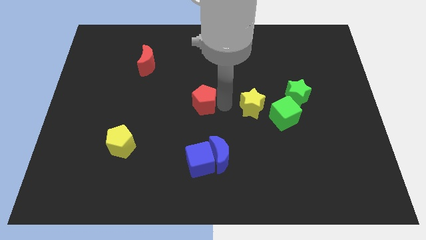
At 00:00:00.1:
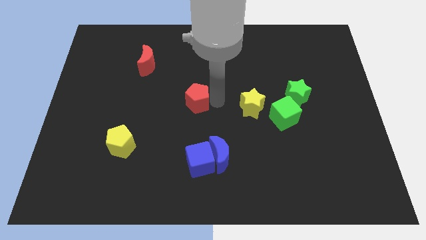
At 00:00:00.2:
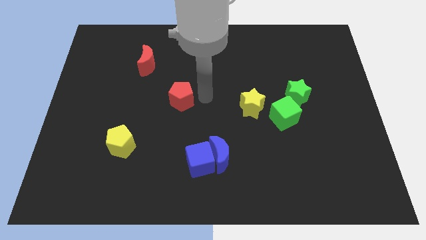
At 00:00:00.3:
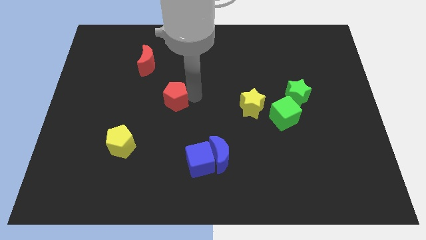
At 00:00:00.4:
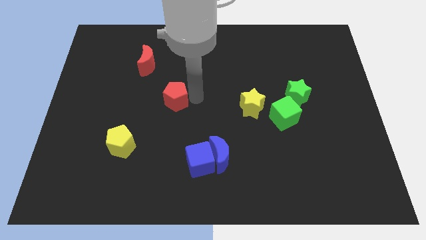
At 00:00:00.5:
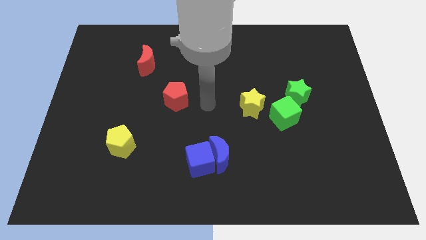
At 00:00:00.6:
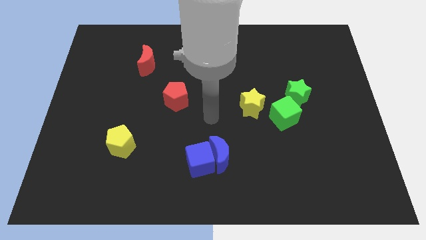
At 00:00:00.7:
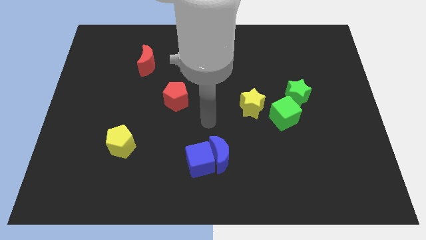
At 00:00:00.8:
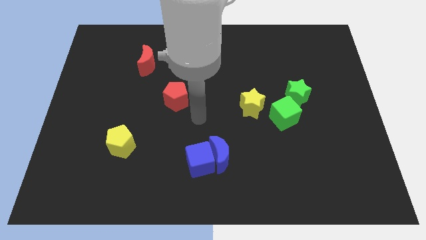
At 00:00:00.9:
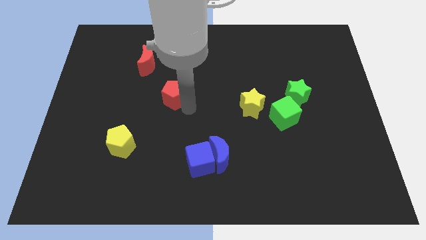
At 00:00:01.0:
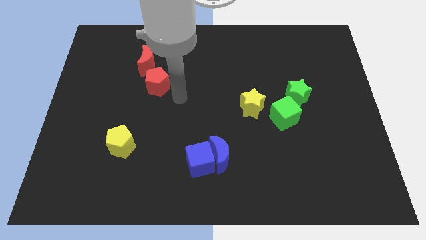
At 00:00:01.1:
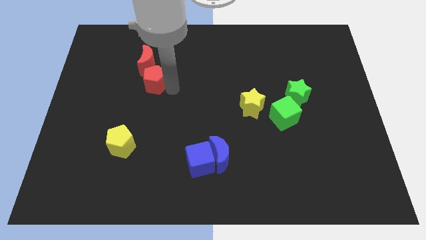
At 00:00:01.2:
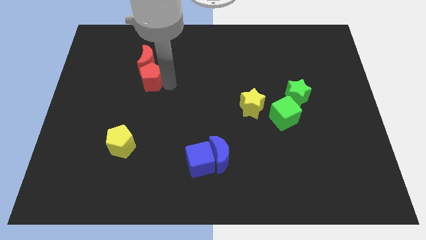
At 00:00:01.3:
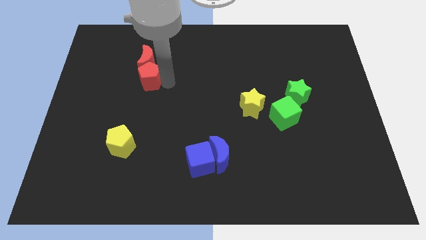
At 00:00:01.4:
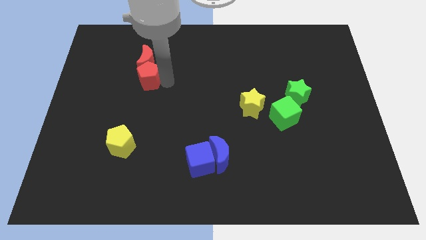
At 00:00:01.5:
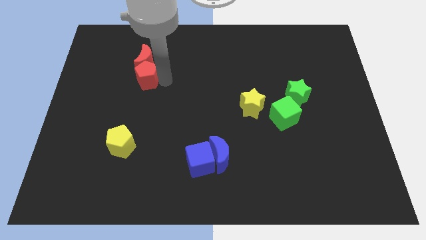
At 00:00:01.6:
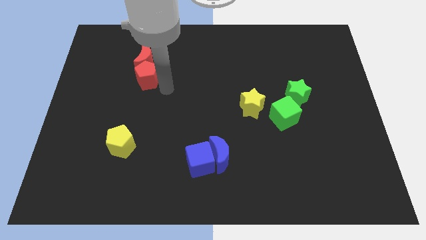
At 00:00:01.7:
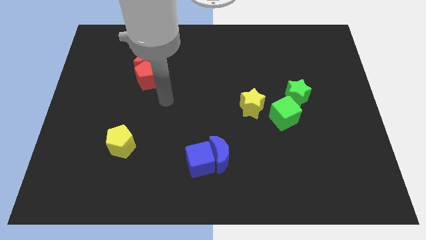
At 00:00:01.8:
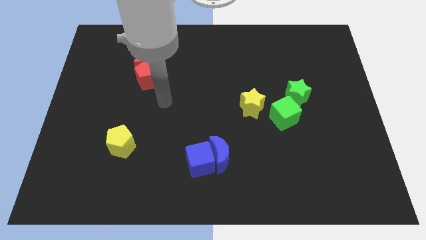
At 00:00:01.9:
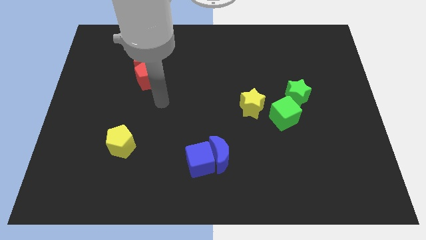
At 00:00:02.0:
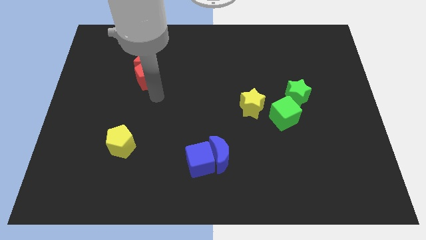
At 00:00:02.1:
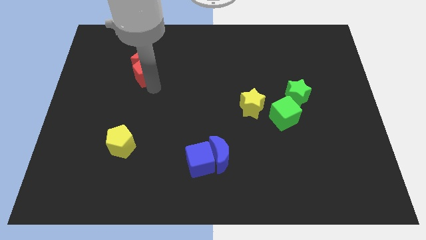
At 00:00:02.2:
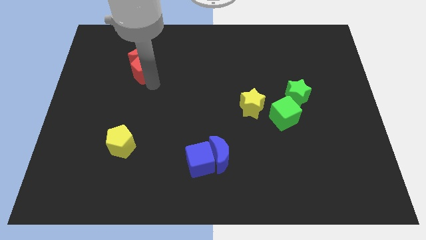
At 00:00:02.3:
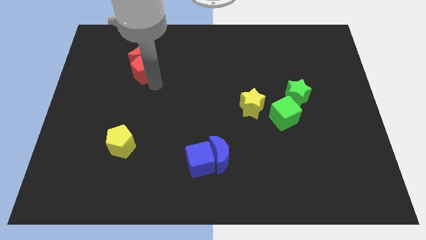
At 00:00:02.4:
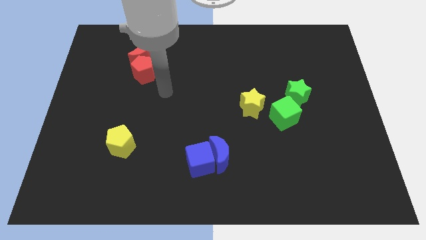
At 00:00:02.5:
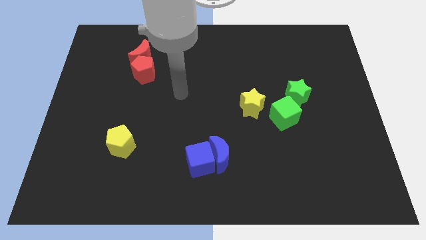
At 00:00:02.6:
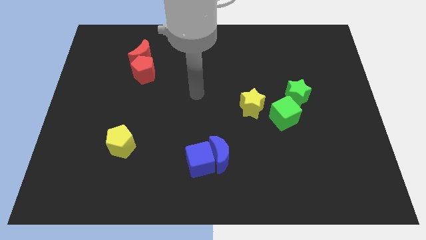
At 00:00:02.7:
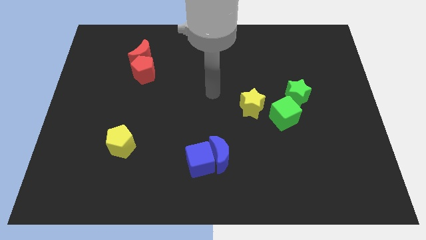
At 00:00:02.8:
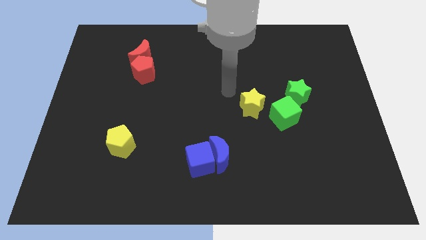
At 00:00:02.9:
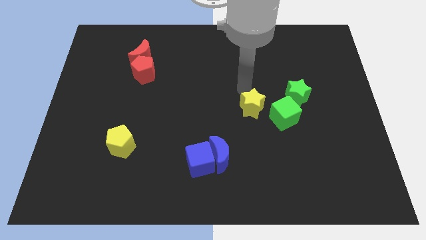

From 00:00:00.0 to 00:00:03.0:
push the red pentagon into the red crescent

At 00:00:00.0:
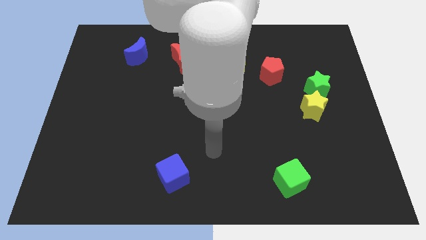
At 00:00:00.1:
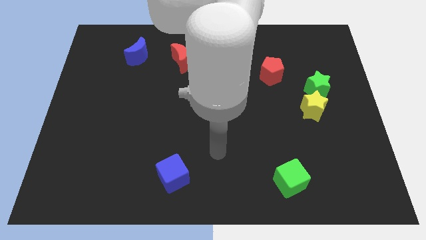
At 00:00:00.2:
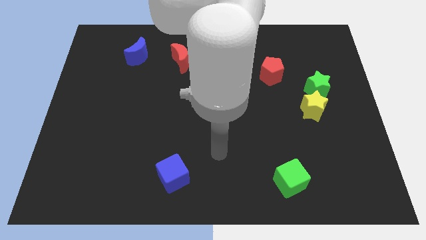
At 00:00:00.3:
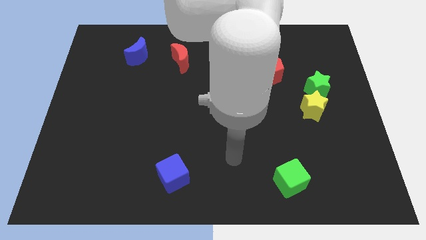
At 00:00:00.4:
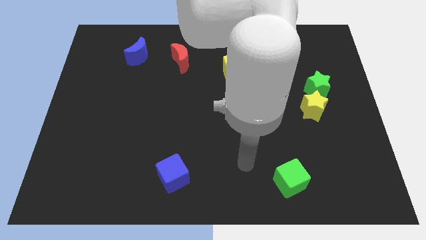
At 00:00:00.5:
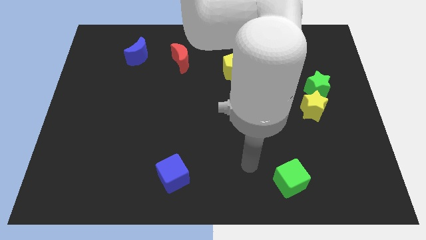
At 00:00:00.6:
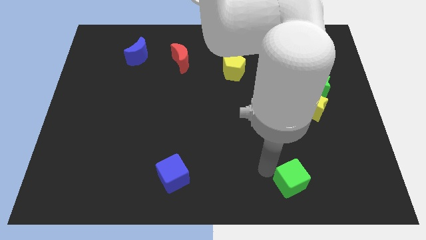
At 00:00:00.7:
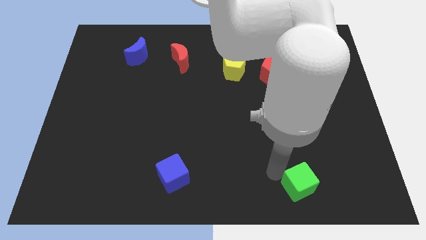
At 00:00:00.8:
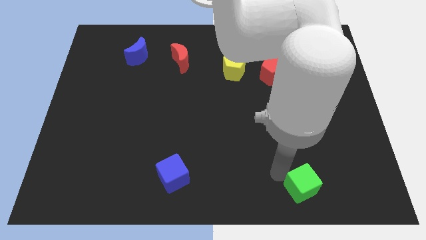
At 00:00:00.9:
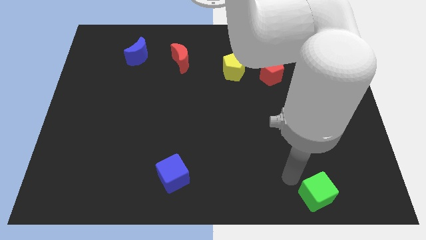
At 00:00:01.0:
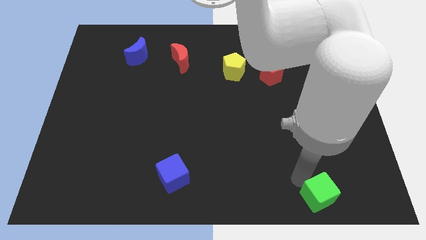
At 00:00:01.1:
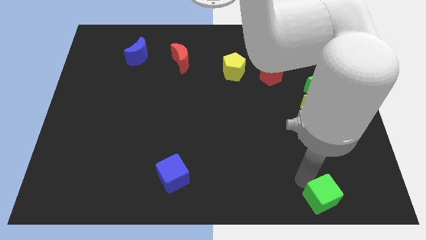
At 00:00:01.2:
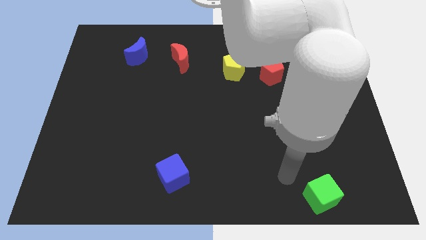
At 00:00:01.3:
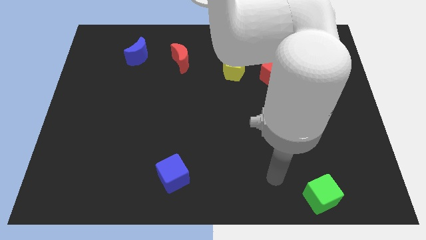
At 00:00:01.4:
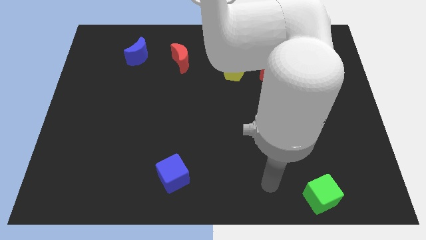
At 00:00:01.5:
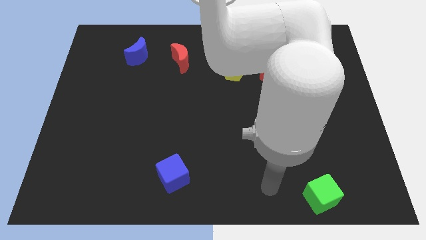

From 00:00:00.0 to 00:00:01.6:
slide the green cube towards the bottom right

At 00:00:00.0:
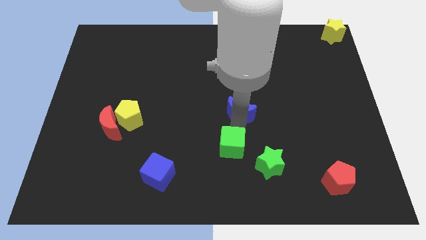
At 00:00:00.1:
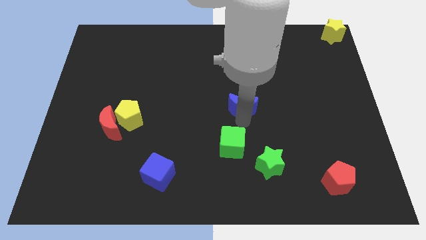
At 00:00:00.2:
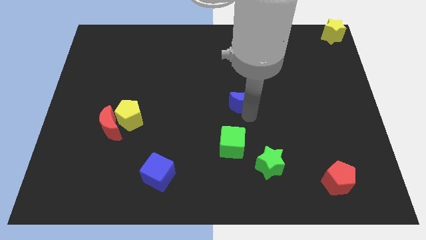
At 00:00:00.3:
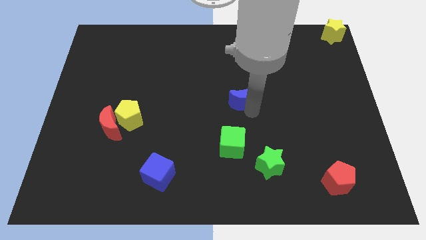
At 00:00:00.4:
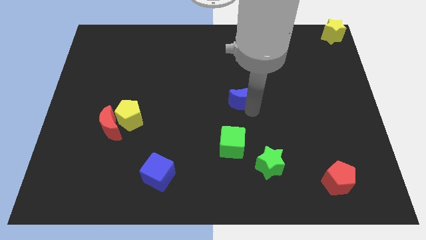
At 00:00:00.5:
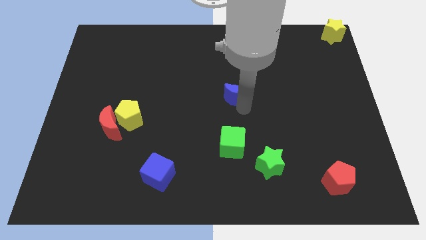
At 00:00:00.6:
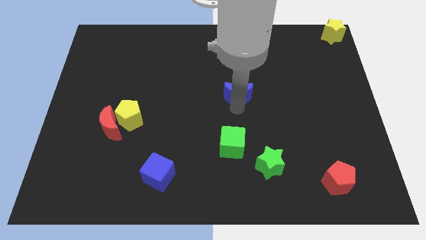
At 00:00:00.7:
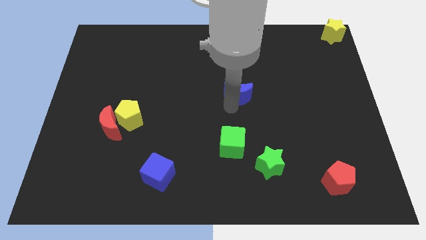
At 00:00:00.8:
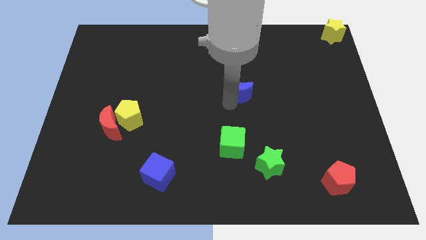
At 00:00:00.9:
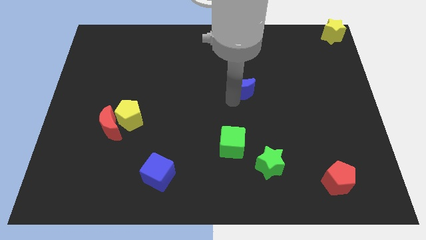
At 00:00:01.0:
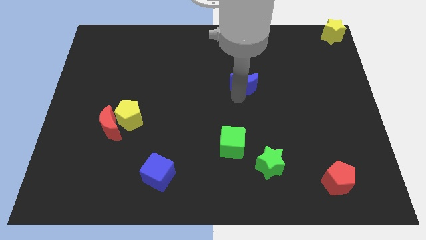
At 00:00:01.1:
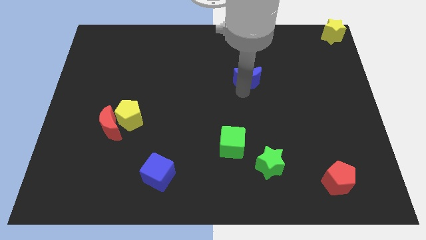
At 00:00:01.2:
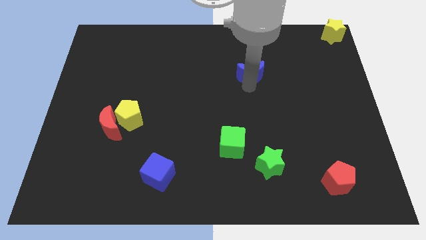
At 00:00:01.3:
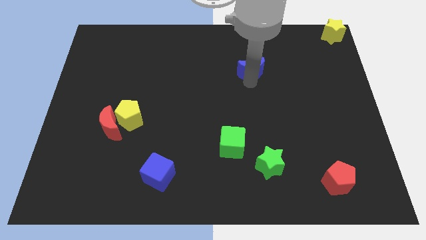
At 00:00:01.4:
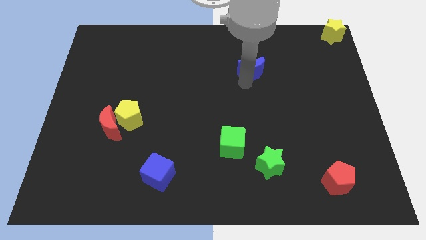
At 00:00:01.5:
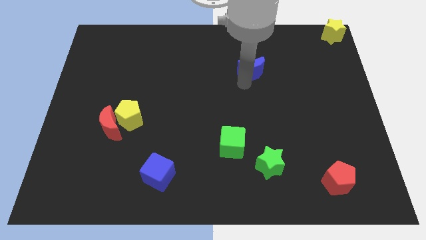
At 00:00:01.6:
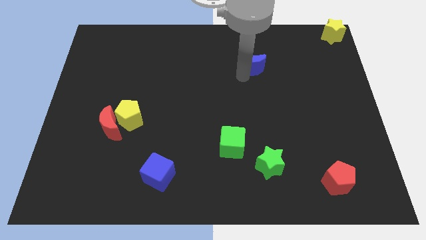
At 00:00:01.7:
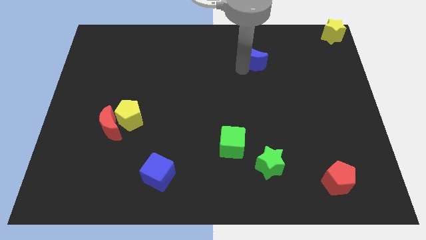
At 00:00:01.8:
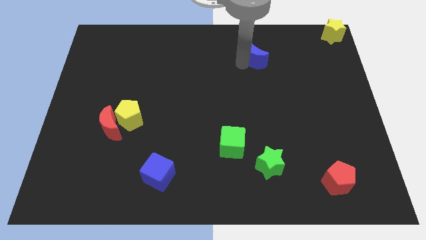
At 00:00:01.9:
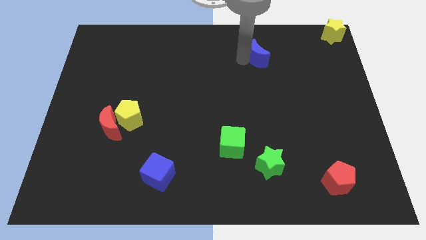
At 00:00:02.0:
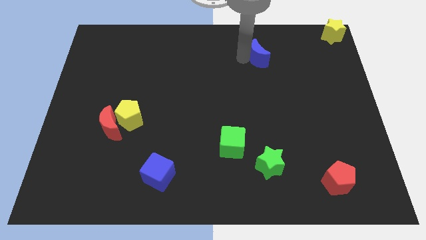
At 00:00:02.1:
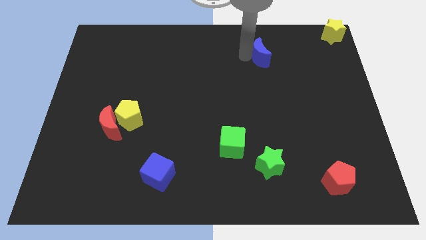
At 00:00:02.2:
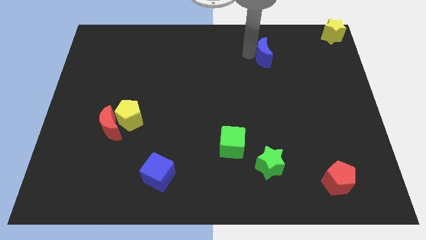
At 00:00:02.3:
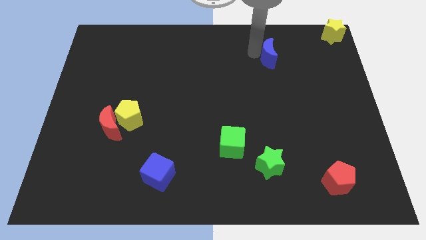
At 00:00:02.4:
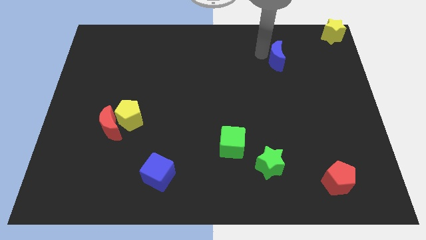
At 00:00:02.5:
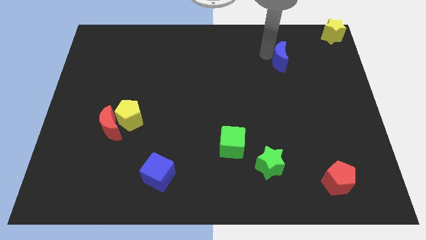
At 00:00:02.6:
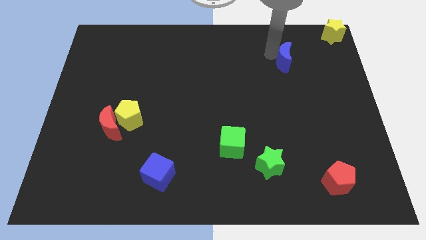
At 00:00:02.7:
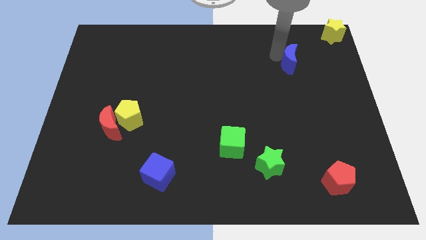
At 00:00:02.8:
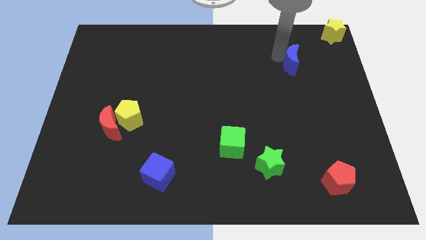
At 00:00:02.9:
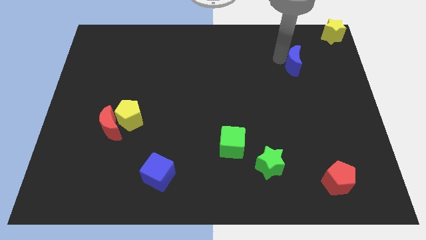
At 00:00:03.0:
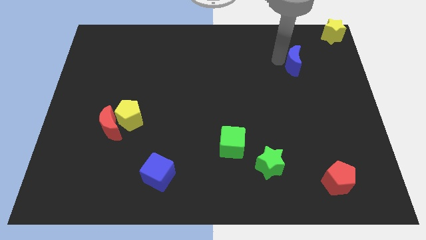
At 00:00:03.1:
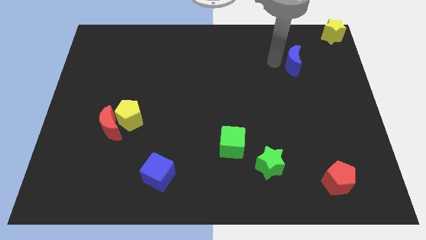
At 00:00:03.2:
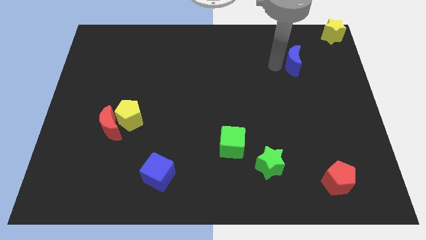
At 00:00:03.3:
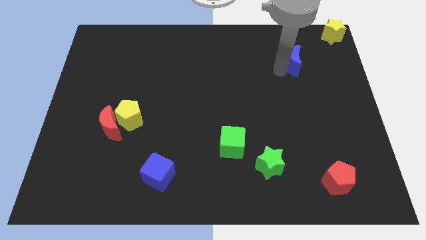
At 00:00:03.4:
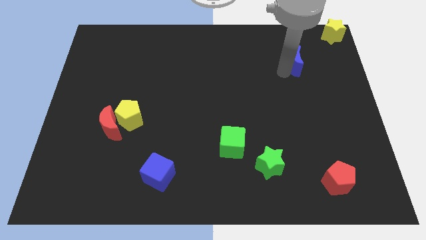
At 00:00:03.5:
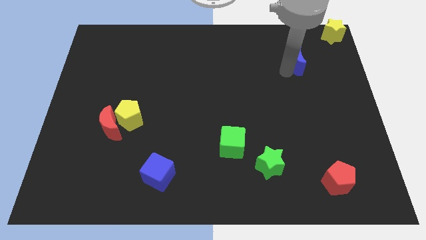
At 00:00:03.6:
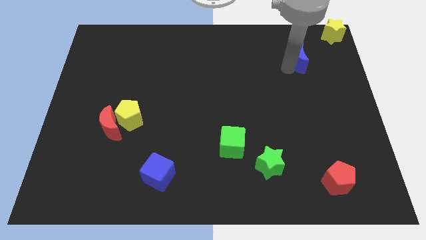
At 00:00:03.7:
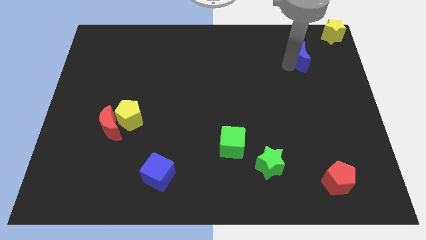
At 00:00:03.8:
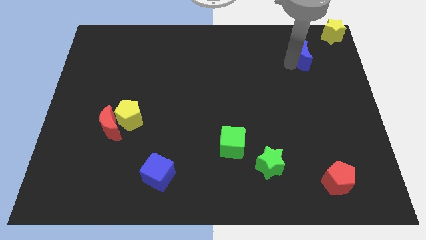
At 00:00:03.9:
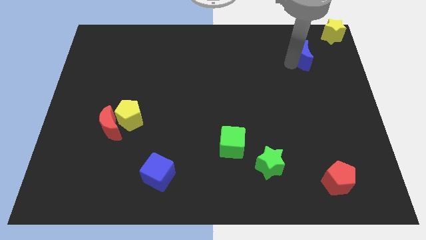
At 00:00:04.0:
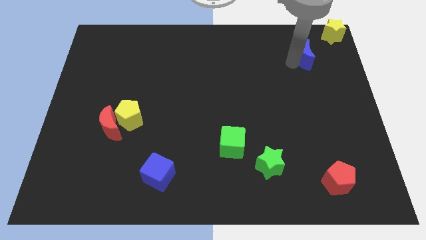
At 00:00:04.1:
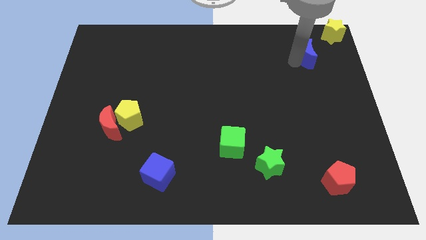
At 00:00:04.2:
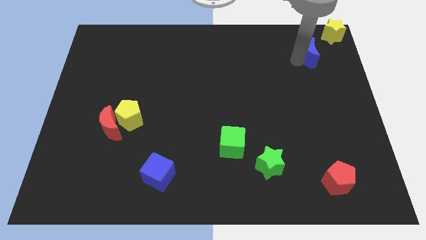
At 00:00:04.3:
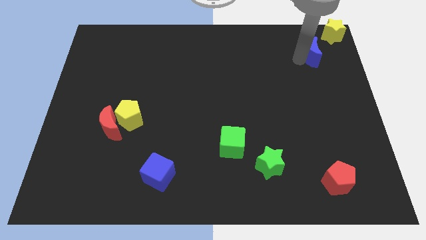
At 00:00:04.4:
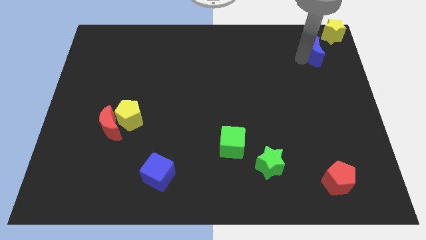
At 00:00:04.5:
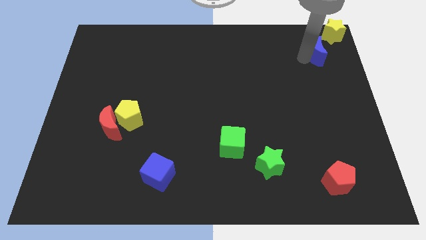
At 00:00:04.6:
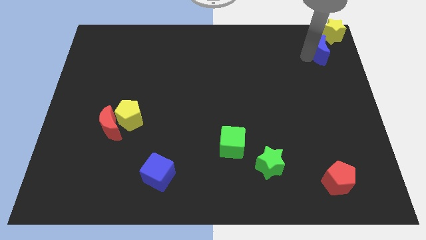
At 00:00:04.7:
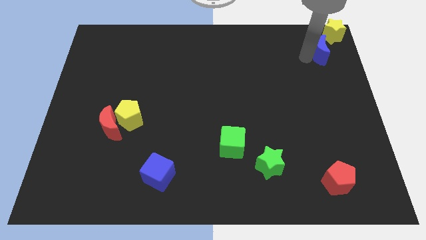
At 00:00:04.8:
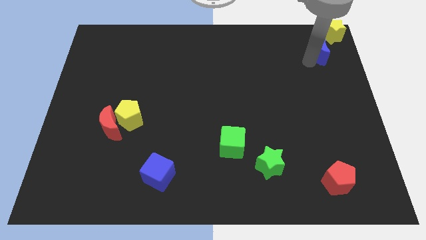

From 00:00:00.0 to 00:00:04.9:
push blue crescent towards yellow star
